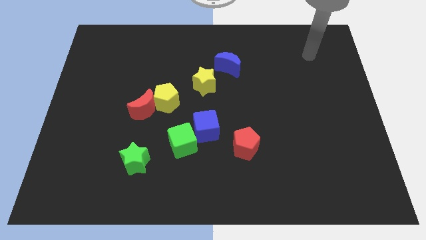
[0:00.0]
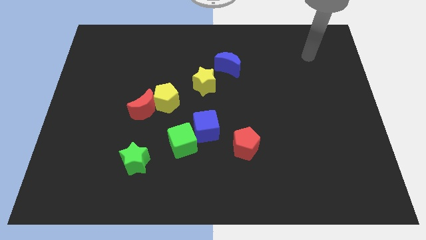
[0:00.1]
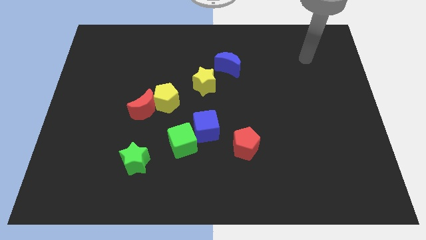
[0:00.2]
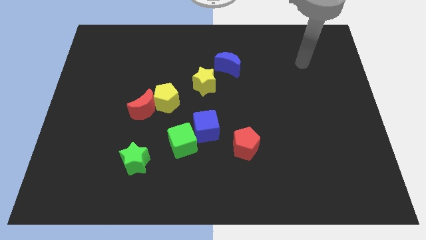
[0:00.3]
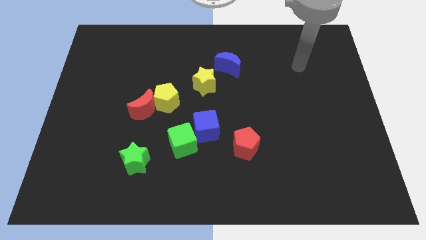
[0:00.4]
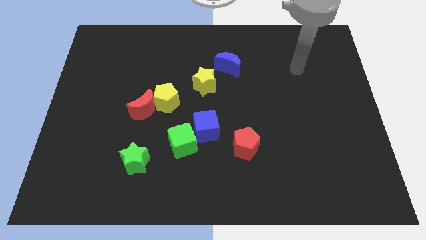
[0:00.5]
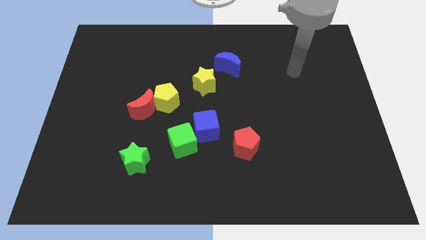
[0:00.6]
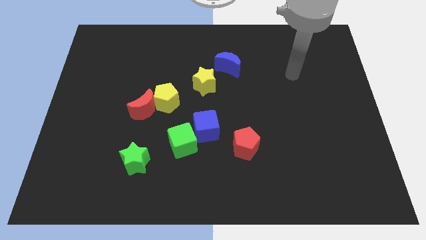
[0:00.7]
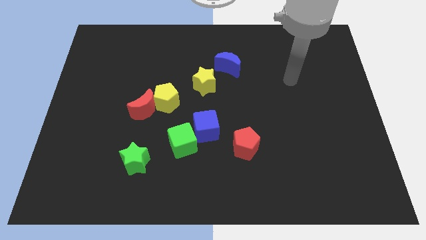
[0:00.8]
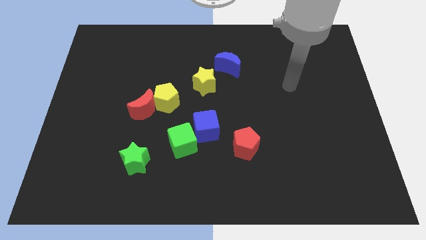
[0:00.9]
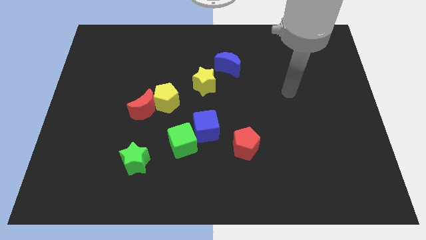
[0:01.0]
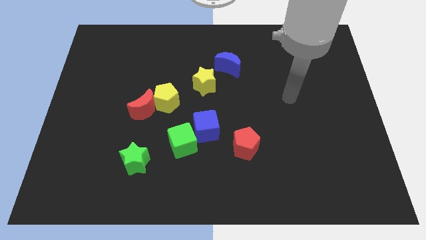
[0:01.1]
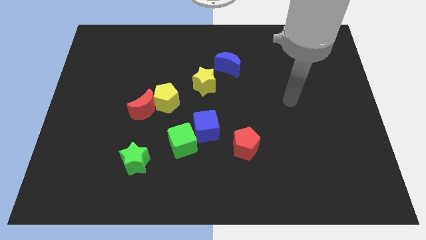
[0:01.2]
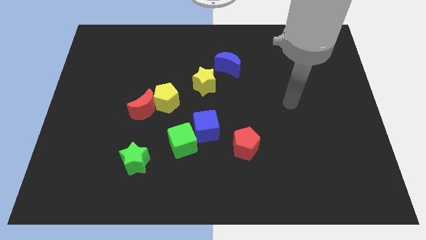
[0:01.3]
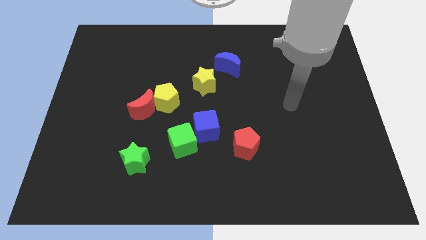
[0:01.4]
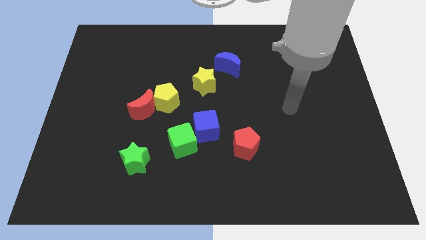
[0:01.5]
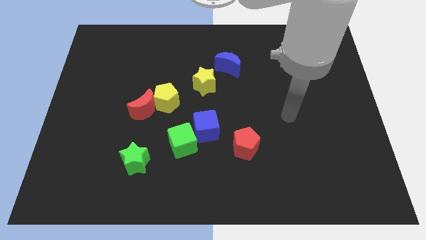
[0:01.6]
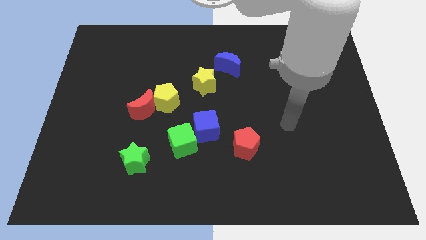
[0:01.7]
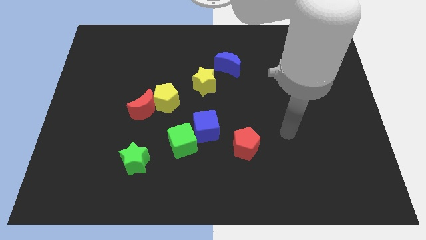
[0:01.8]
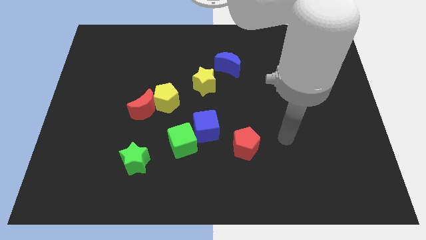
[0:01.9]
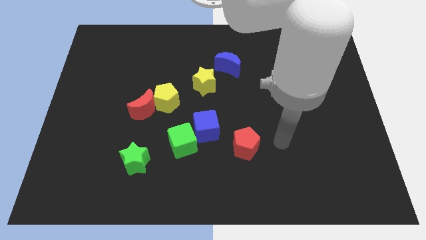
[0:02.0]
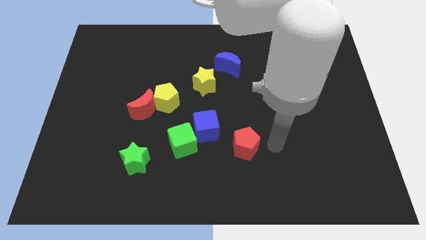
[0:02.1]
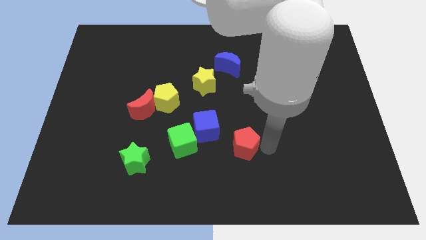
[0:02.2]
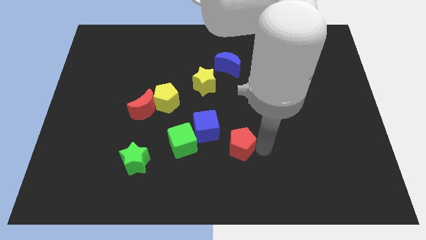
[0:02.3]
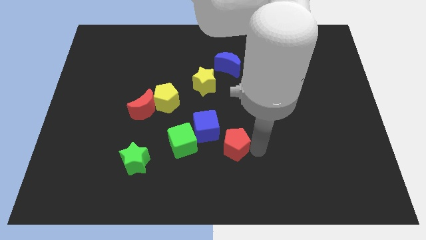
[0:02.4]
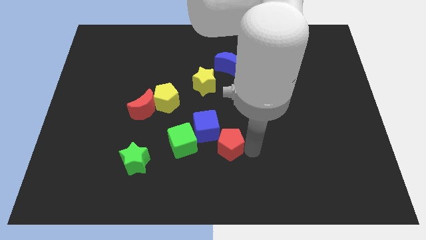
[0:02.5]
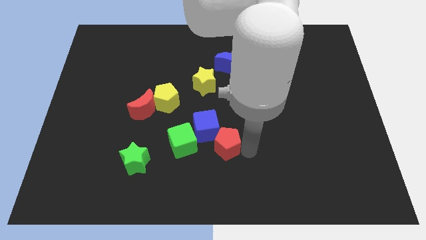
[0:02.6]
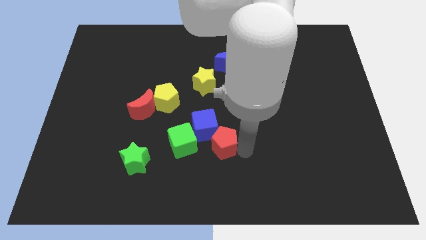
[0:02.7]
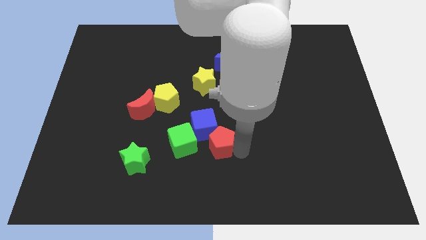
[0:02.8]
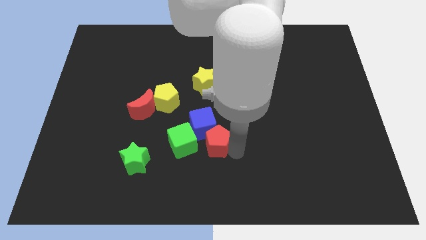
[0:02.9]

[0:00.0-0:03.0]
drag the red pentagon to bottom right of blue cube

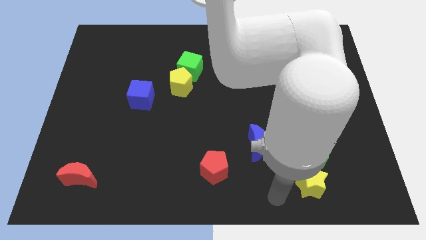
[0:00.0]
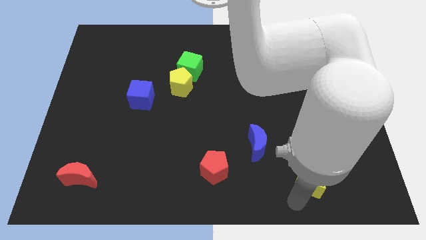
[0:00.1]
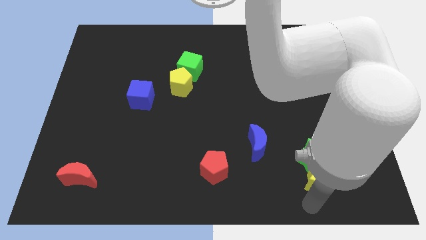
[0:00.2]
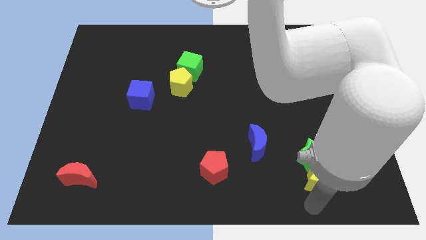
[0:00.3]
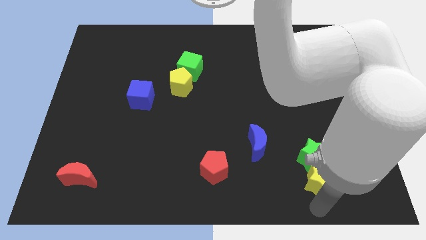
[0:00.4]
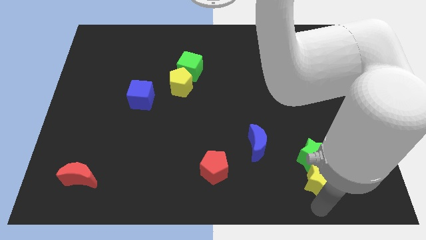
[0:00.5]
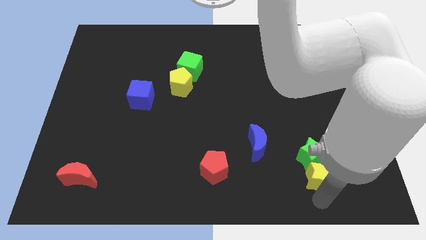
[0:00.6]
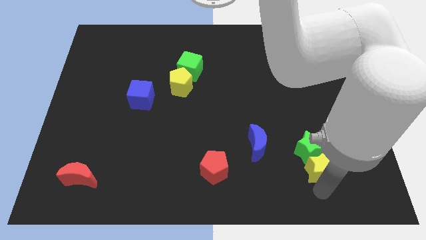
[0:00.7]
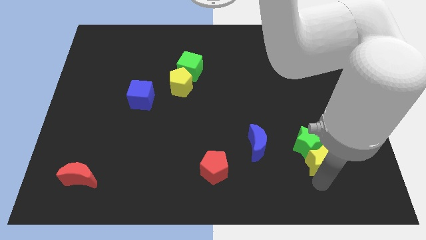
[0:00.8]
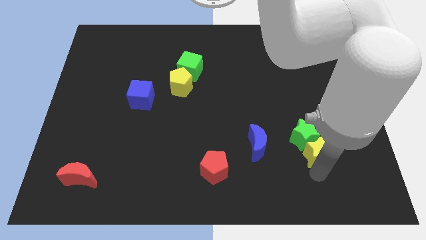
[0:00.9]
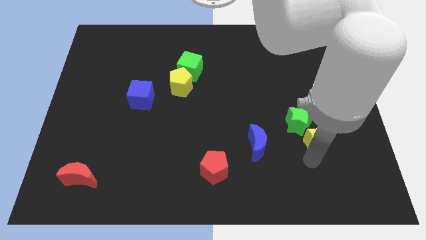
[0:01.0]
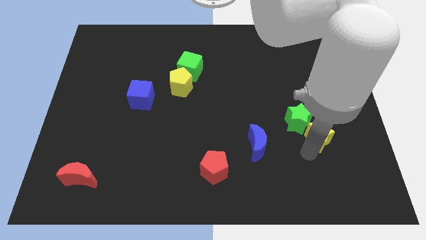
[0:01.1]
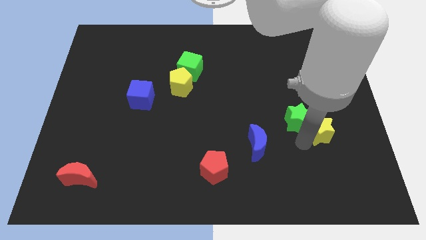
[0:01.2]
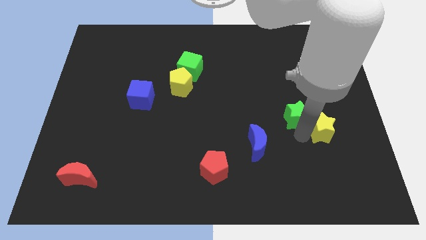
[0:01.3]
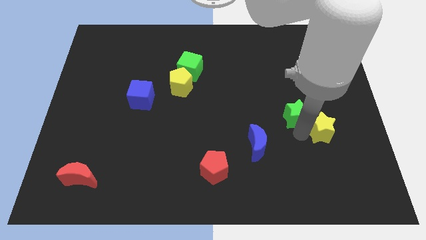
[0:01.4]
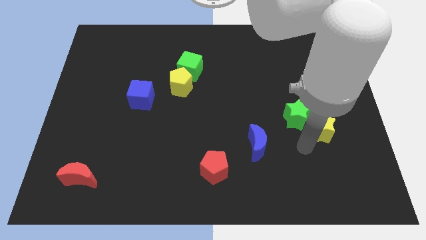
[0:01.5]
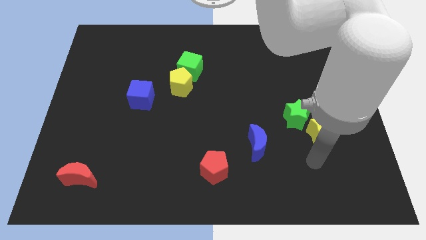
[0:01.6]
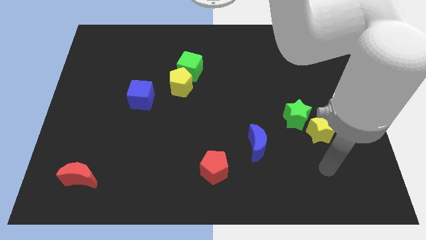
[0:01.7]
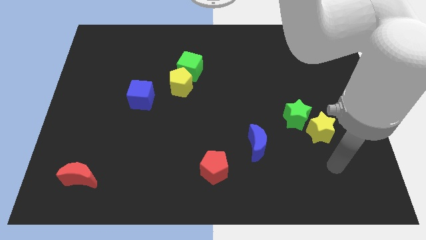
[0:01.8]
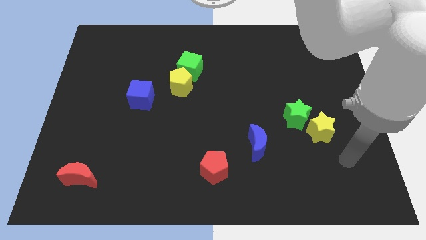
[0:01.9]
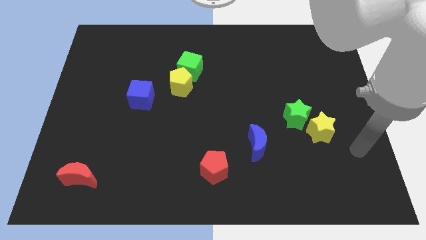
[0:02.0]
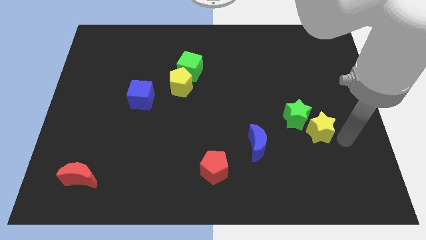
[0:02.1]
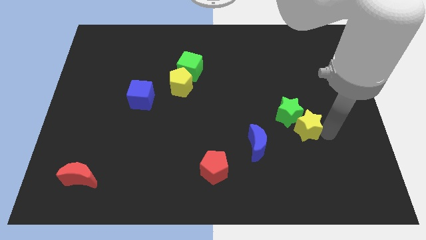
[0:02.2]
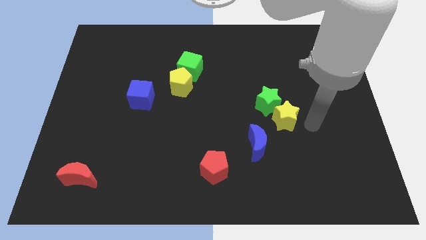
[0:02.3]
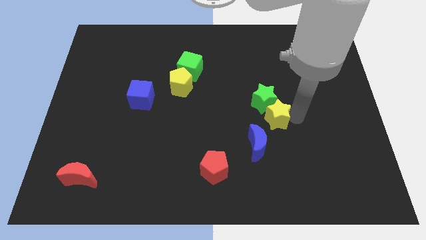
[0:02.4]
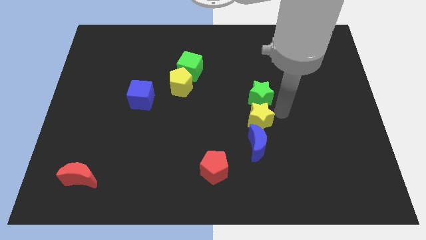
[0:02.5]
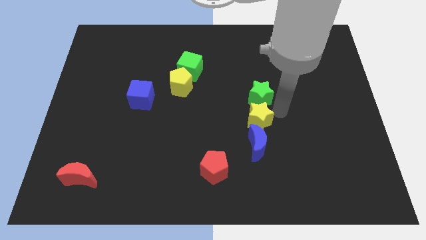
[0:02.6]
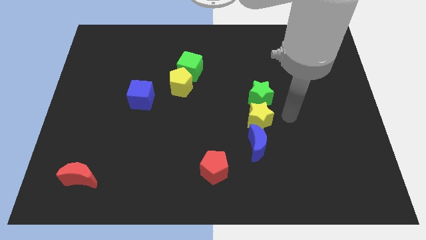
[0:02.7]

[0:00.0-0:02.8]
move stars vertically above blue moon

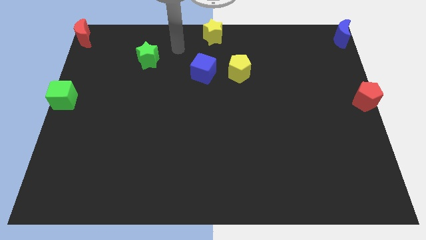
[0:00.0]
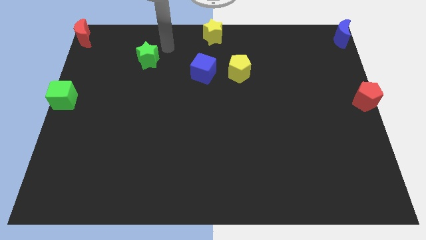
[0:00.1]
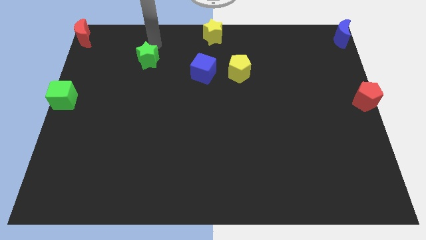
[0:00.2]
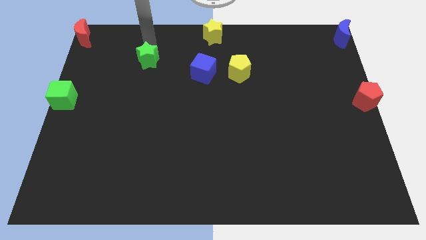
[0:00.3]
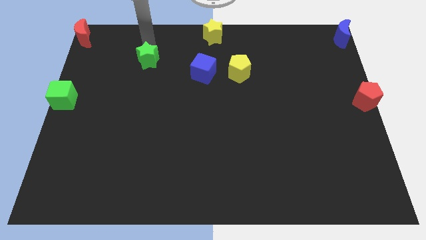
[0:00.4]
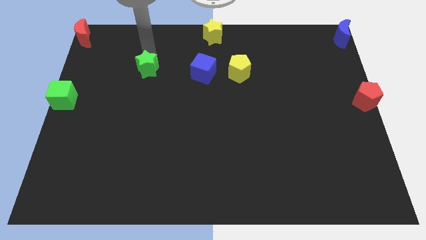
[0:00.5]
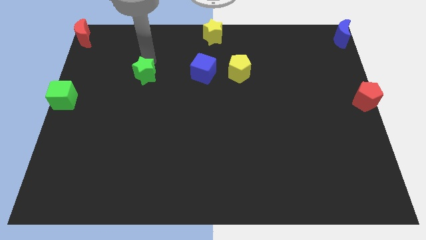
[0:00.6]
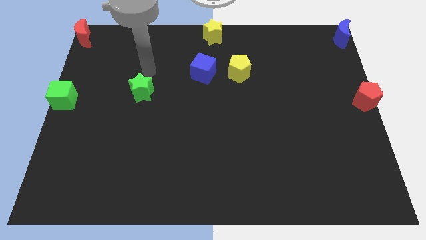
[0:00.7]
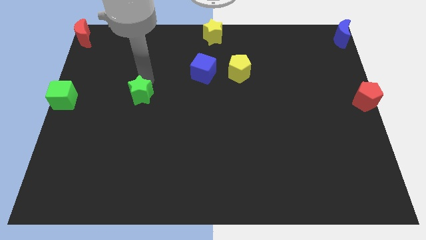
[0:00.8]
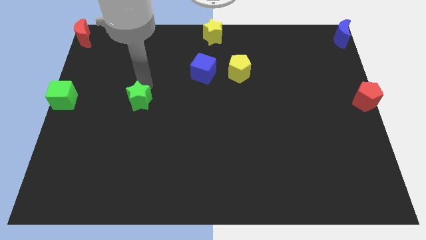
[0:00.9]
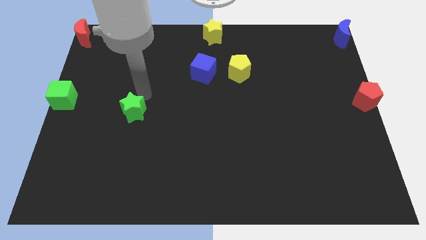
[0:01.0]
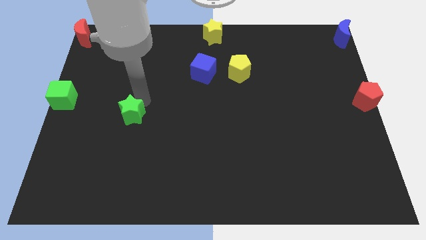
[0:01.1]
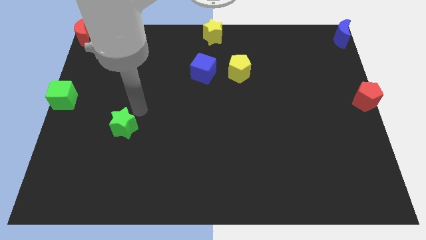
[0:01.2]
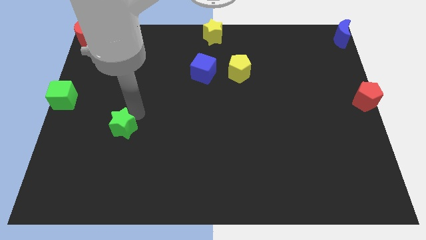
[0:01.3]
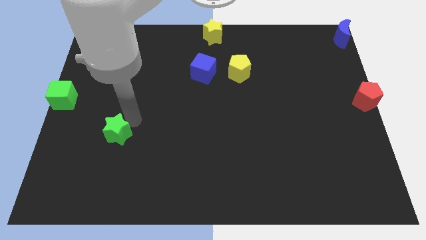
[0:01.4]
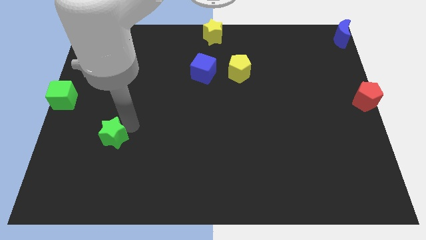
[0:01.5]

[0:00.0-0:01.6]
push the green star slightly to the bottom of the board

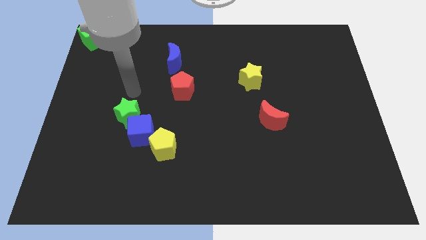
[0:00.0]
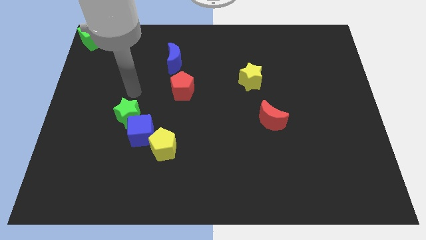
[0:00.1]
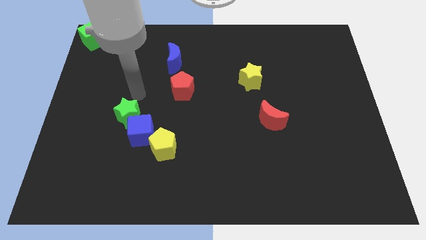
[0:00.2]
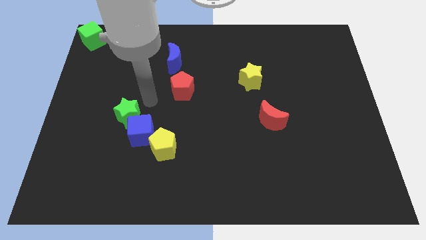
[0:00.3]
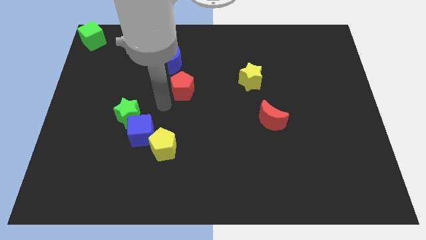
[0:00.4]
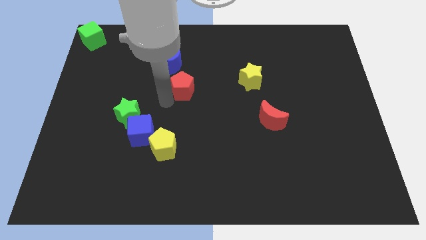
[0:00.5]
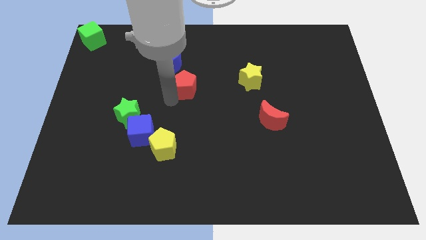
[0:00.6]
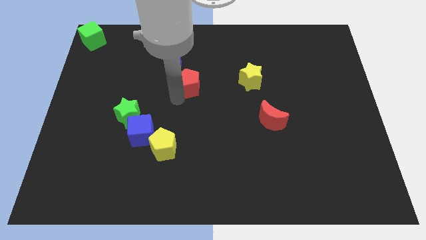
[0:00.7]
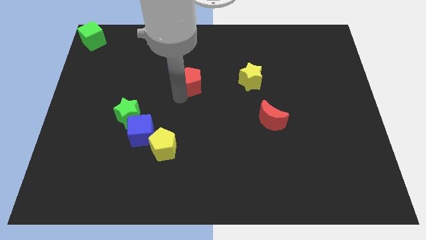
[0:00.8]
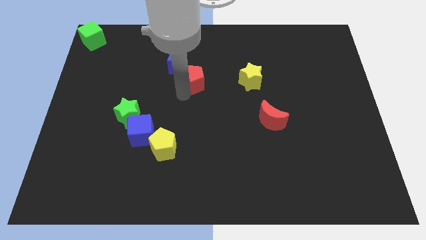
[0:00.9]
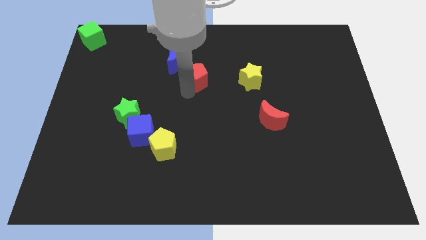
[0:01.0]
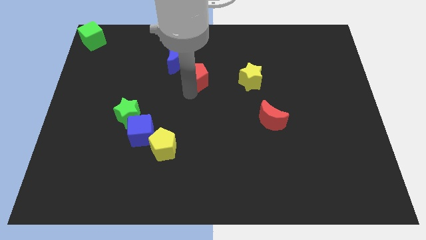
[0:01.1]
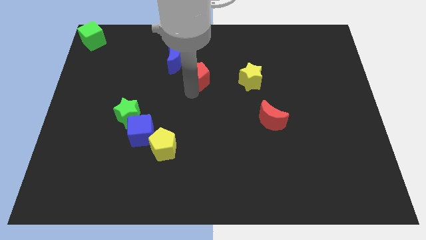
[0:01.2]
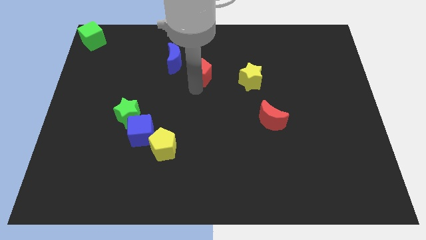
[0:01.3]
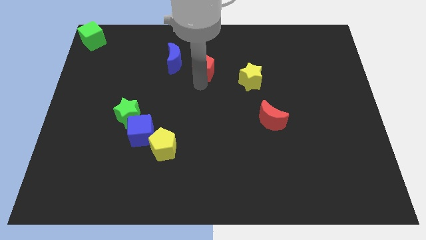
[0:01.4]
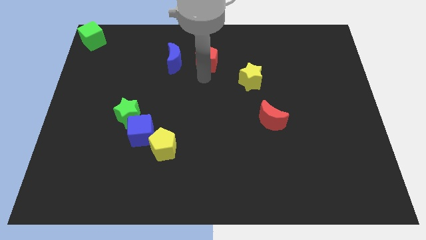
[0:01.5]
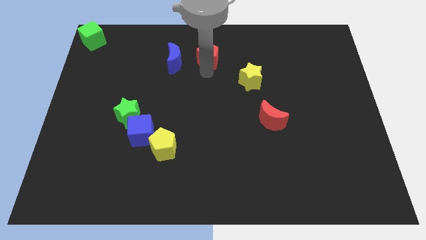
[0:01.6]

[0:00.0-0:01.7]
move red pentagon on the right of blue moon
